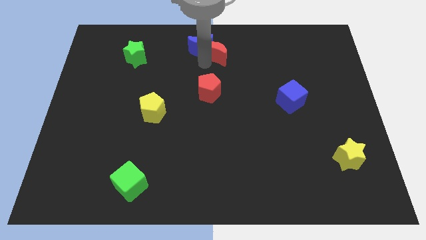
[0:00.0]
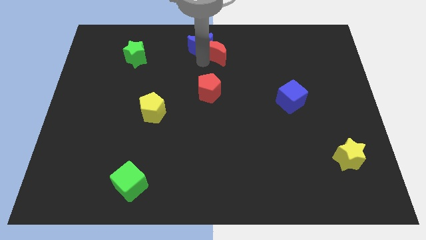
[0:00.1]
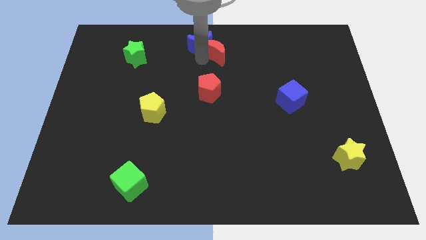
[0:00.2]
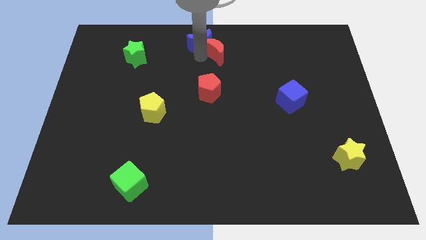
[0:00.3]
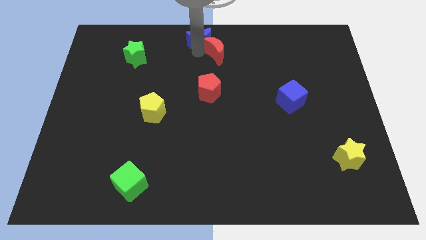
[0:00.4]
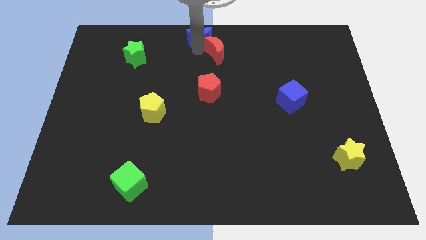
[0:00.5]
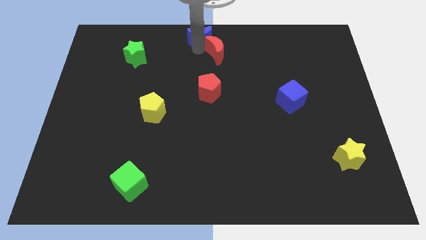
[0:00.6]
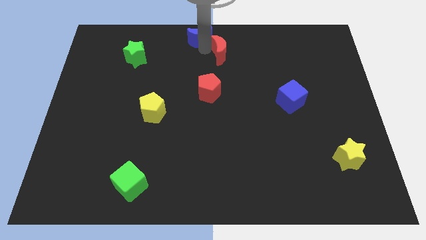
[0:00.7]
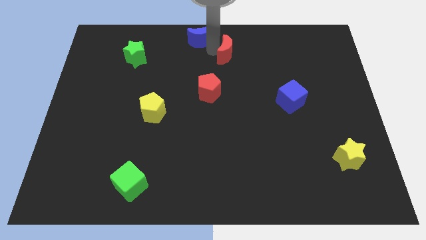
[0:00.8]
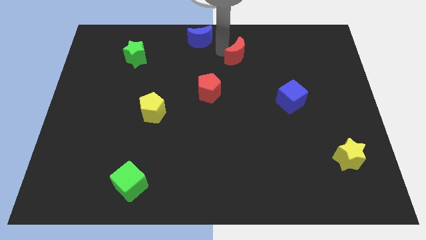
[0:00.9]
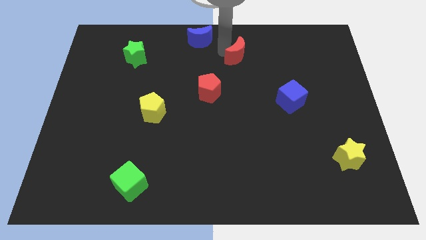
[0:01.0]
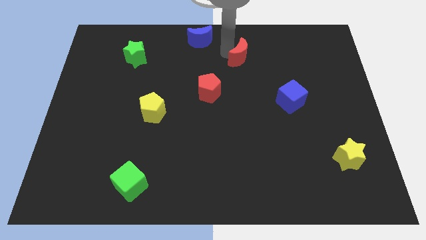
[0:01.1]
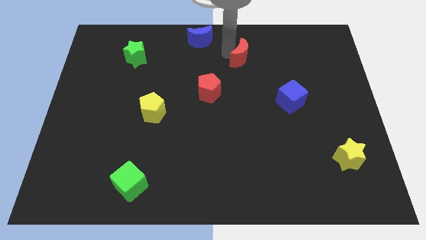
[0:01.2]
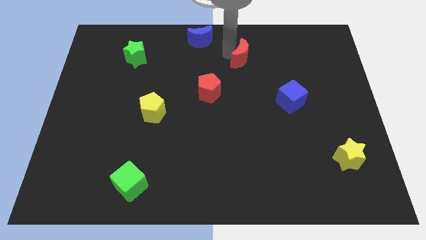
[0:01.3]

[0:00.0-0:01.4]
separate the red moon from blue crescent

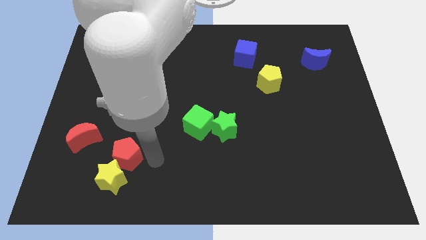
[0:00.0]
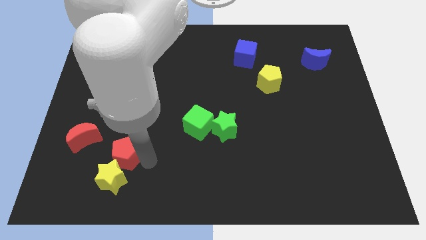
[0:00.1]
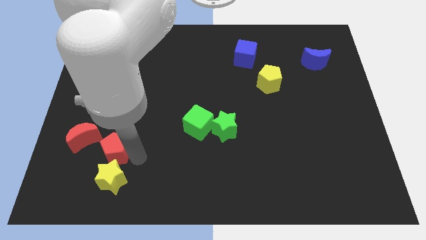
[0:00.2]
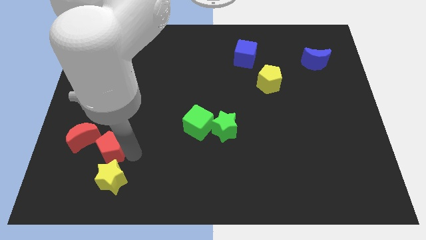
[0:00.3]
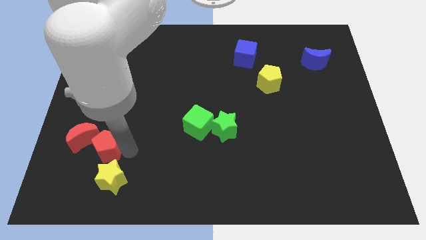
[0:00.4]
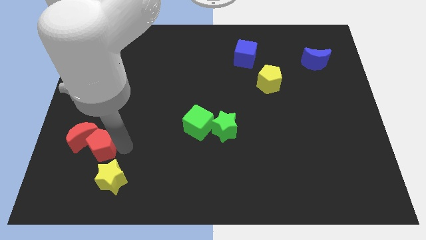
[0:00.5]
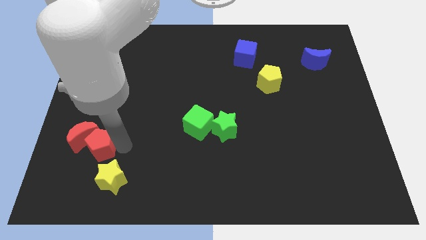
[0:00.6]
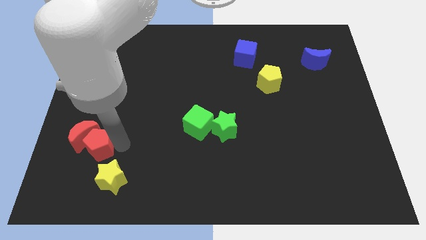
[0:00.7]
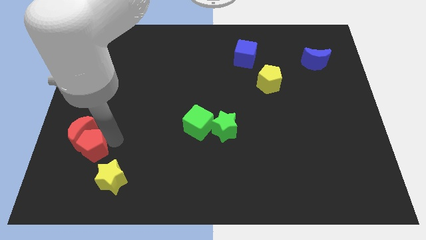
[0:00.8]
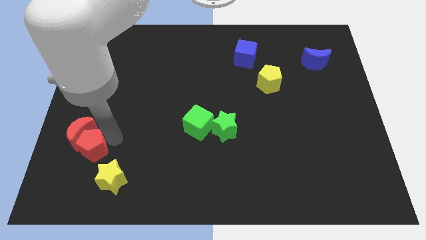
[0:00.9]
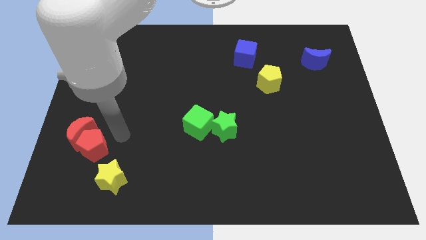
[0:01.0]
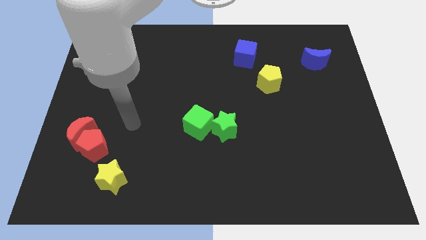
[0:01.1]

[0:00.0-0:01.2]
push the red pentagon into red crescent

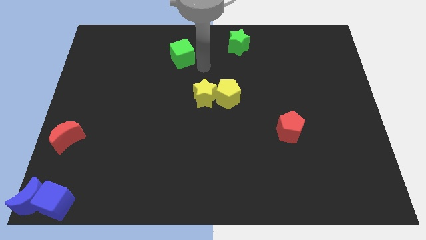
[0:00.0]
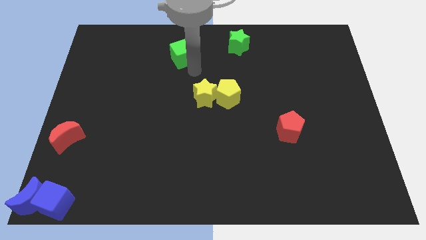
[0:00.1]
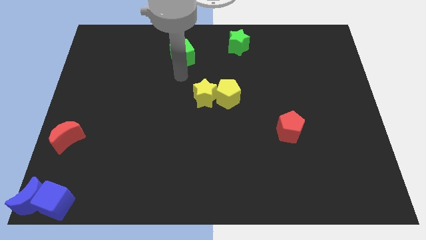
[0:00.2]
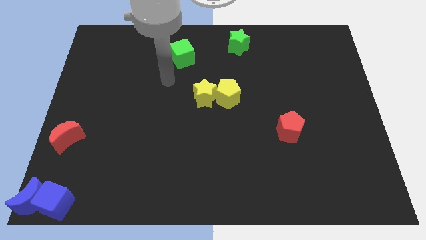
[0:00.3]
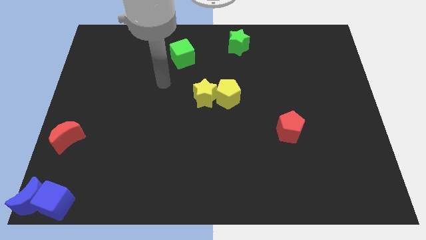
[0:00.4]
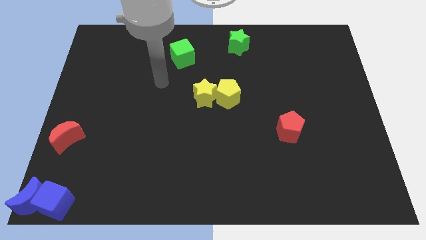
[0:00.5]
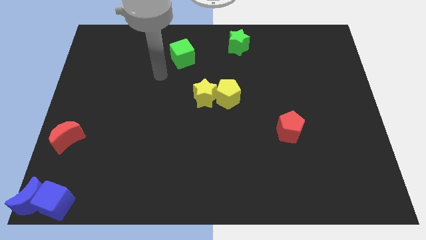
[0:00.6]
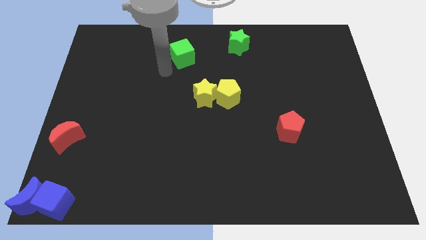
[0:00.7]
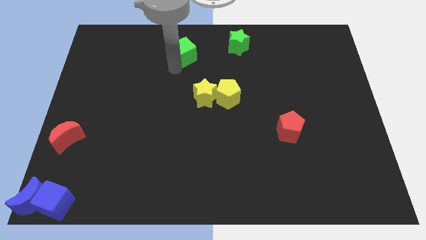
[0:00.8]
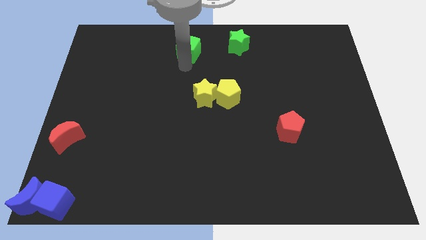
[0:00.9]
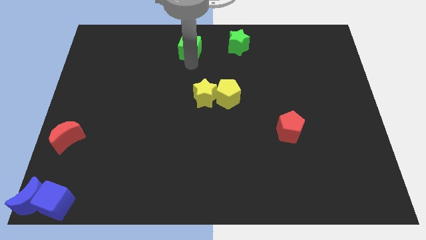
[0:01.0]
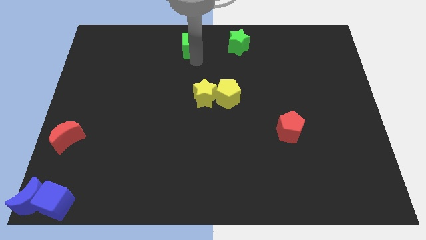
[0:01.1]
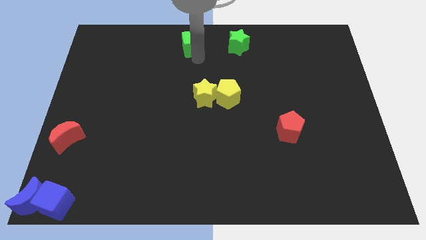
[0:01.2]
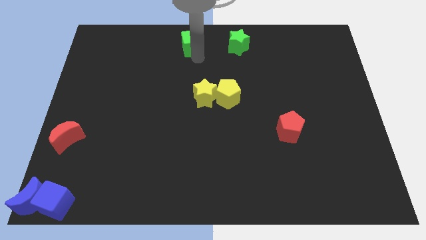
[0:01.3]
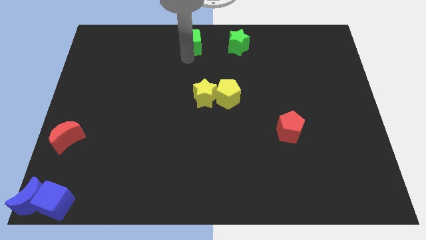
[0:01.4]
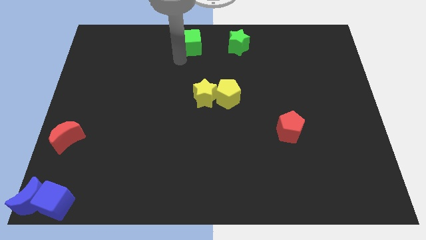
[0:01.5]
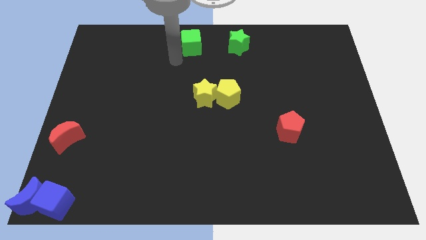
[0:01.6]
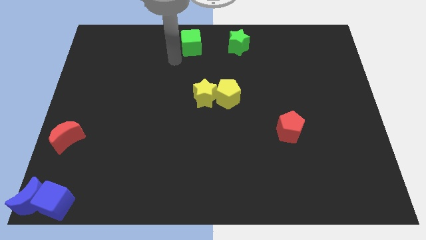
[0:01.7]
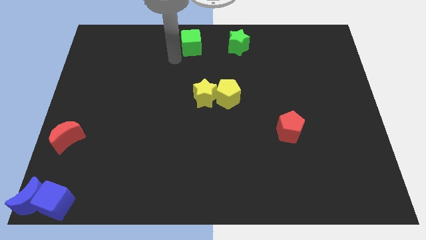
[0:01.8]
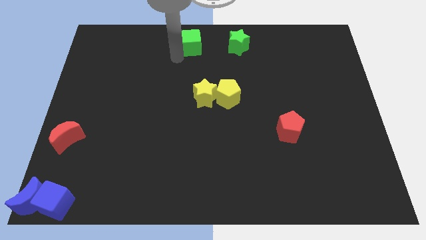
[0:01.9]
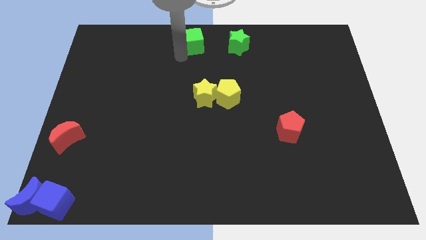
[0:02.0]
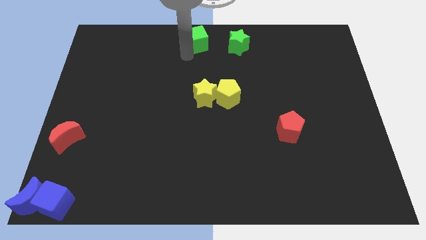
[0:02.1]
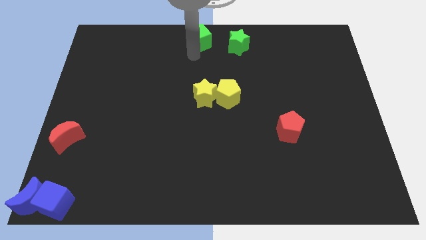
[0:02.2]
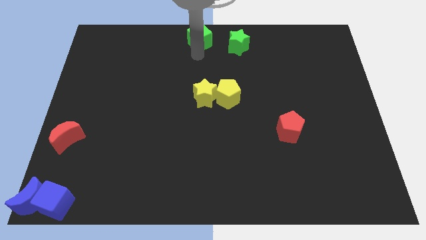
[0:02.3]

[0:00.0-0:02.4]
place the green cube to the left of the green star

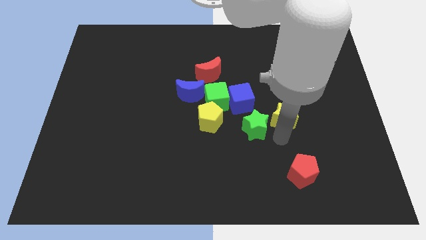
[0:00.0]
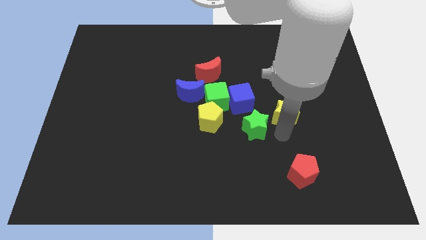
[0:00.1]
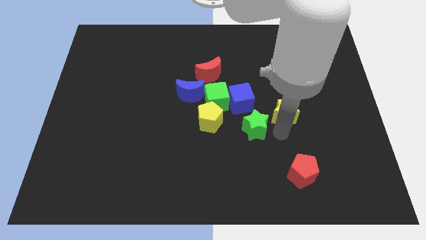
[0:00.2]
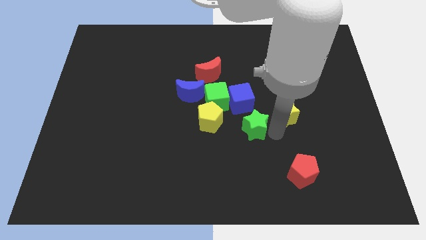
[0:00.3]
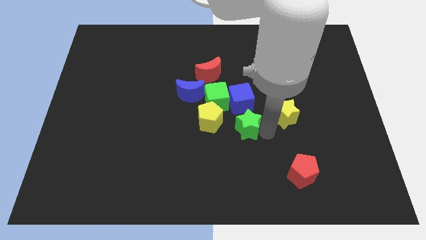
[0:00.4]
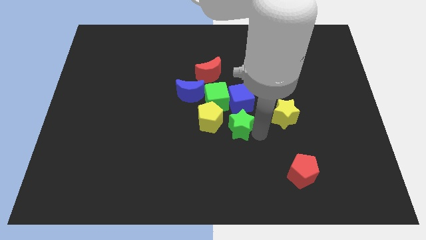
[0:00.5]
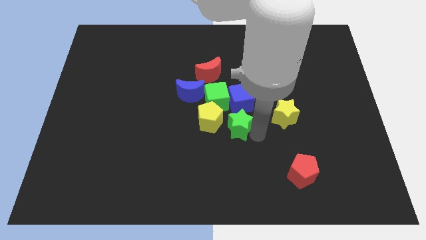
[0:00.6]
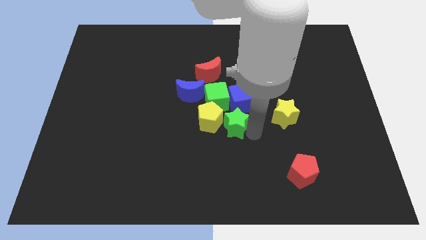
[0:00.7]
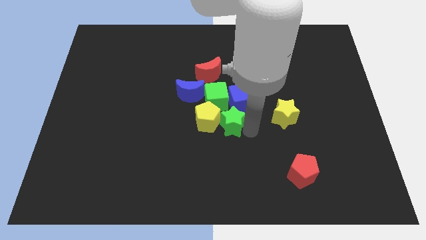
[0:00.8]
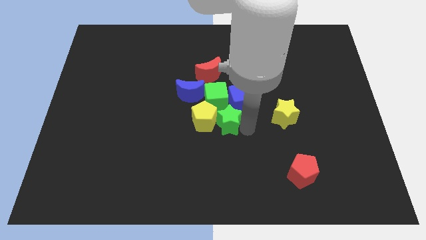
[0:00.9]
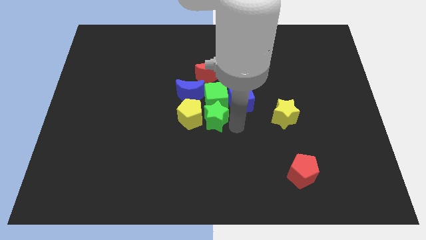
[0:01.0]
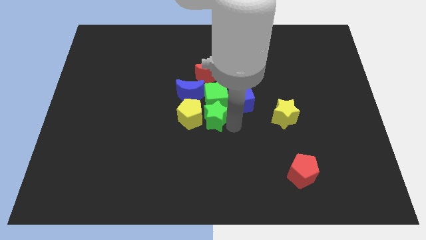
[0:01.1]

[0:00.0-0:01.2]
place the green star right to the yellow pentagon

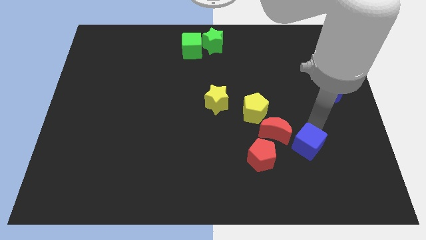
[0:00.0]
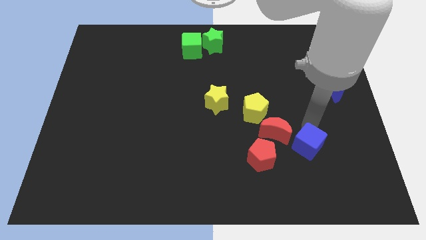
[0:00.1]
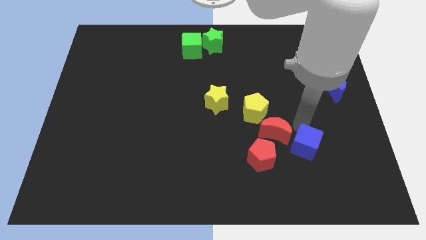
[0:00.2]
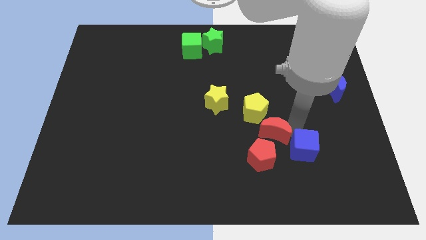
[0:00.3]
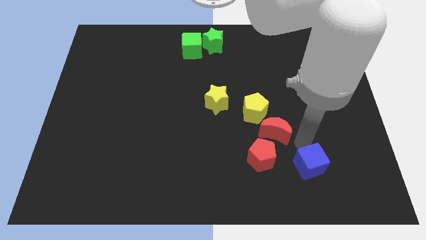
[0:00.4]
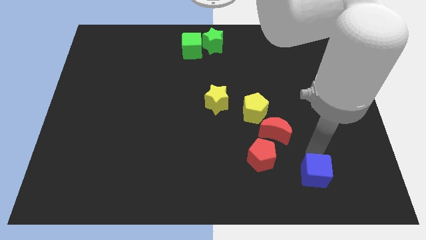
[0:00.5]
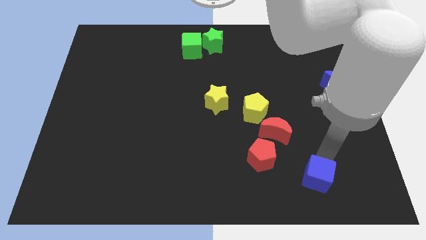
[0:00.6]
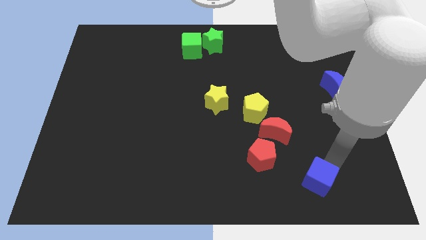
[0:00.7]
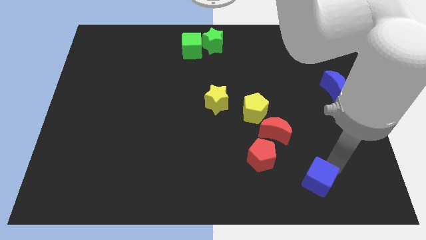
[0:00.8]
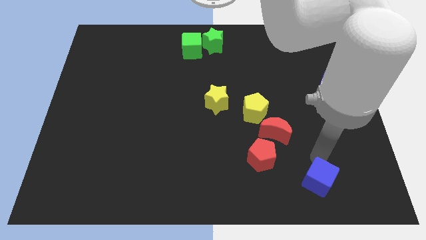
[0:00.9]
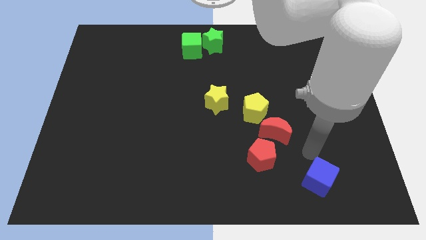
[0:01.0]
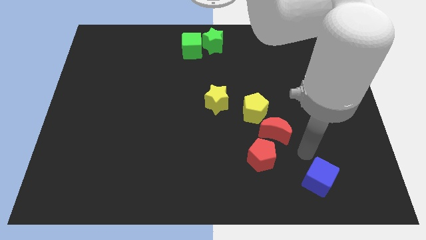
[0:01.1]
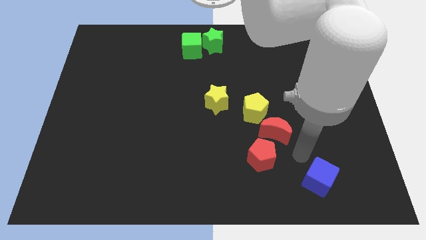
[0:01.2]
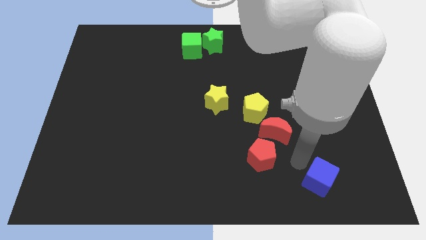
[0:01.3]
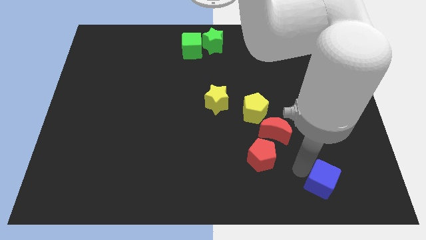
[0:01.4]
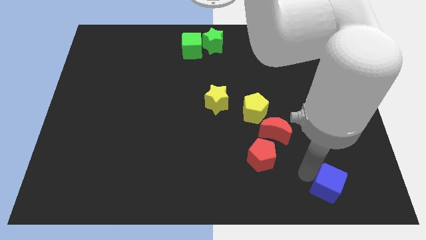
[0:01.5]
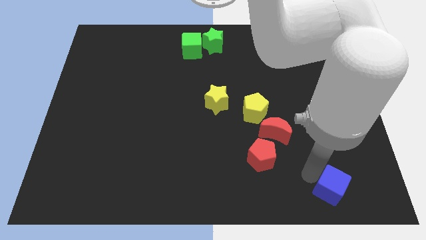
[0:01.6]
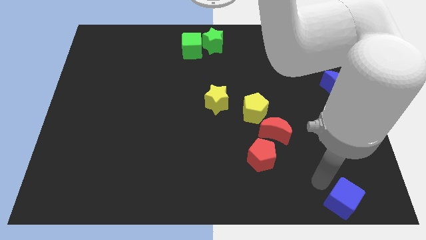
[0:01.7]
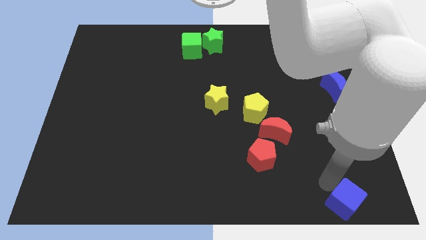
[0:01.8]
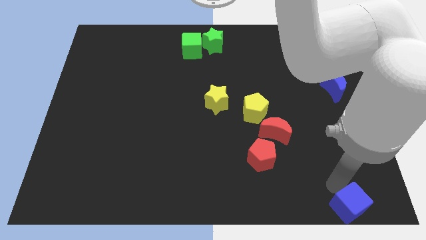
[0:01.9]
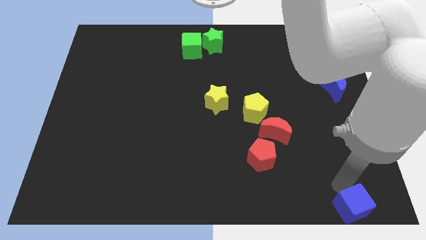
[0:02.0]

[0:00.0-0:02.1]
push blue cube towards the bottom right

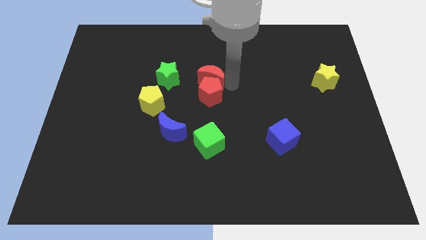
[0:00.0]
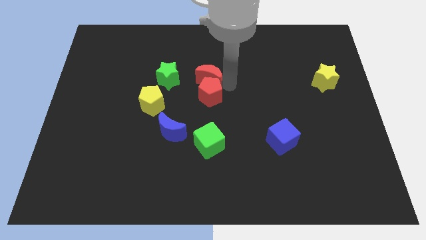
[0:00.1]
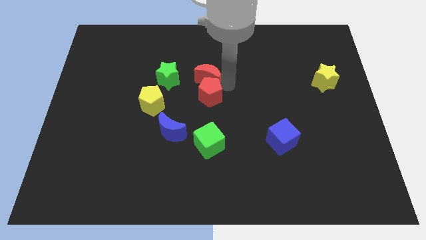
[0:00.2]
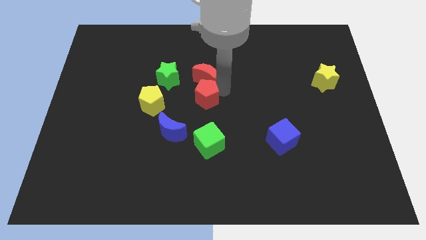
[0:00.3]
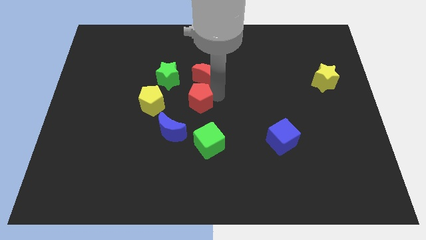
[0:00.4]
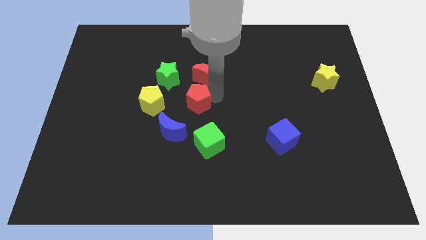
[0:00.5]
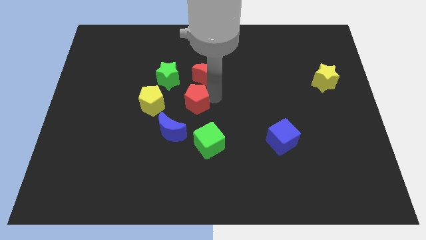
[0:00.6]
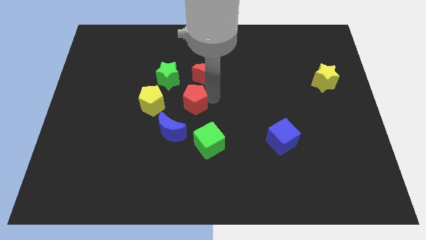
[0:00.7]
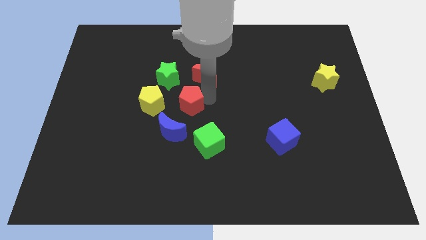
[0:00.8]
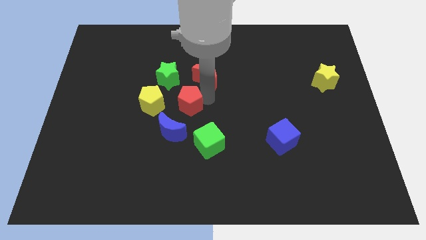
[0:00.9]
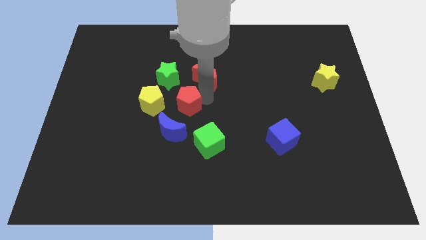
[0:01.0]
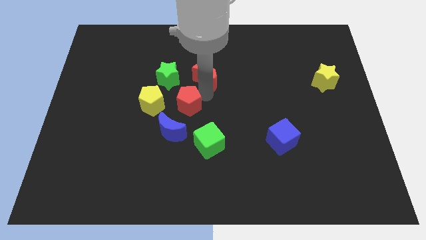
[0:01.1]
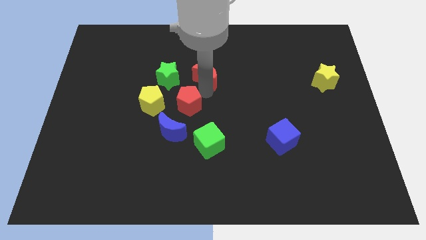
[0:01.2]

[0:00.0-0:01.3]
separate the red pentagon away from the red crescent
